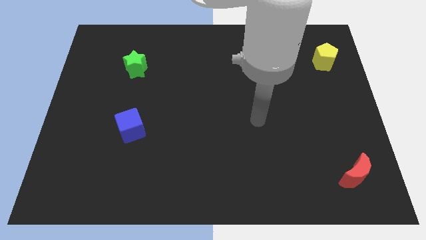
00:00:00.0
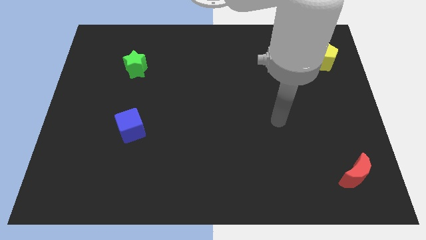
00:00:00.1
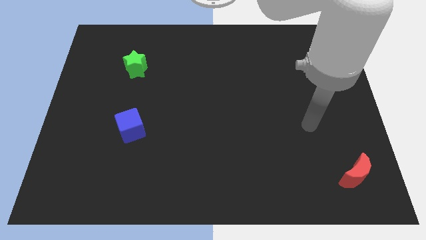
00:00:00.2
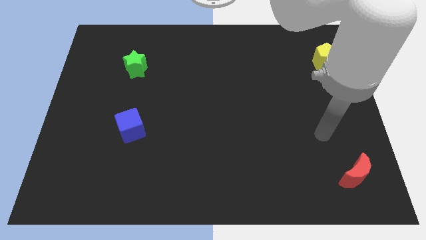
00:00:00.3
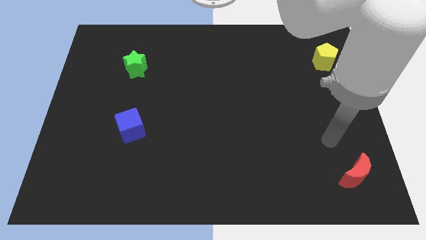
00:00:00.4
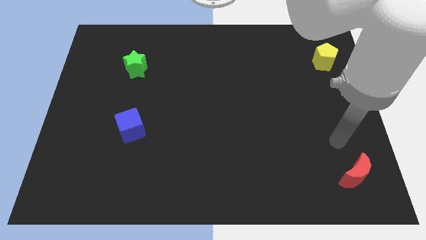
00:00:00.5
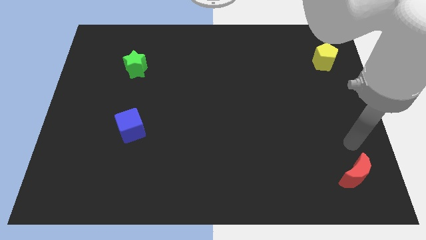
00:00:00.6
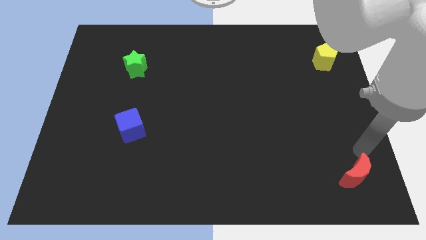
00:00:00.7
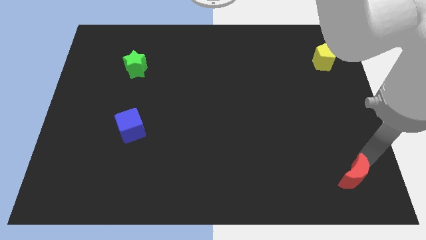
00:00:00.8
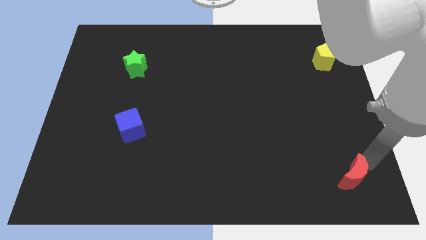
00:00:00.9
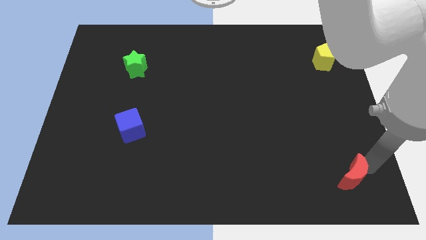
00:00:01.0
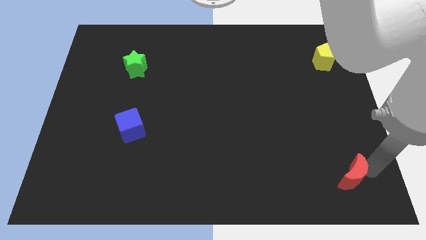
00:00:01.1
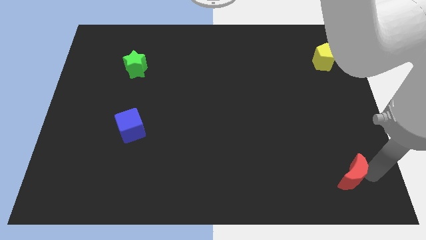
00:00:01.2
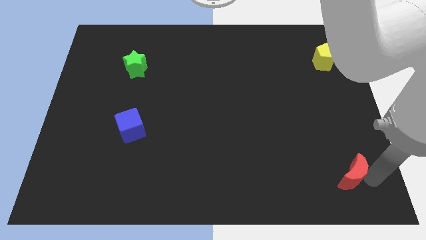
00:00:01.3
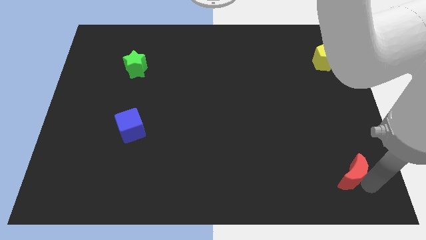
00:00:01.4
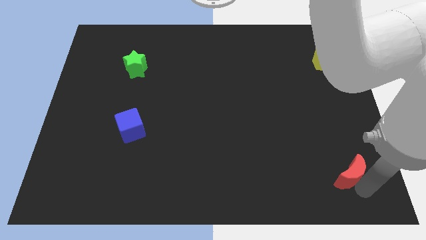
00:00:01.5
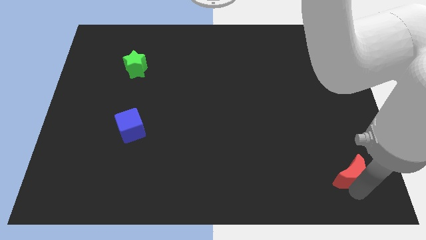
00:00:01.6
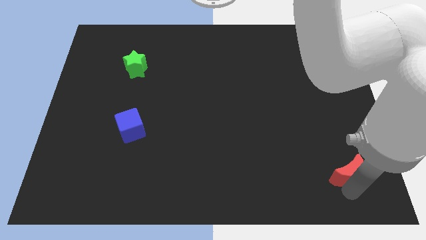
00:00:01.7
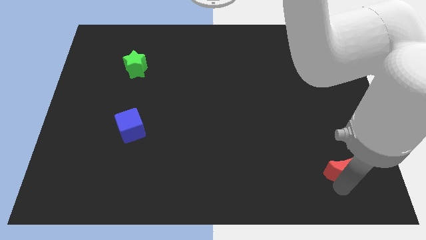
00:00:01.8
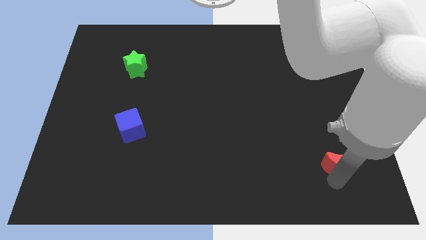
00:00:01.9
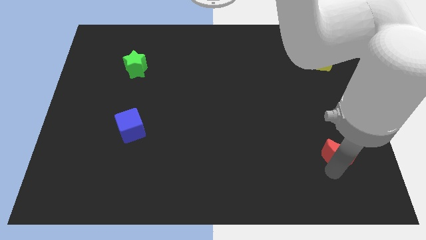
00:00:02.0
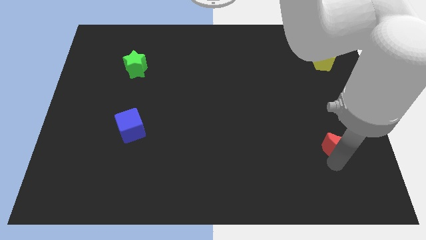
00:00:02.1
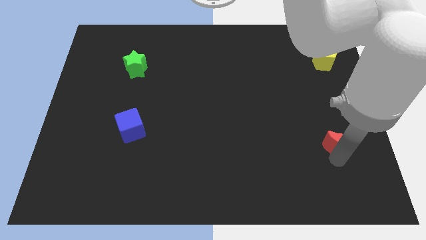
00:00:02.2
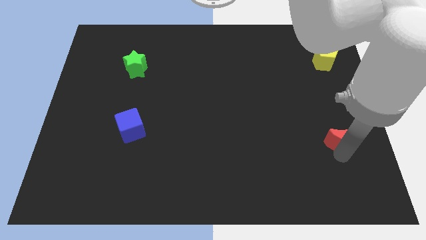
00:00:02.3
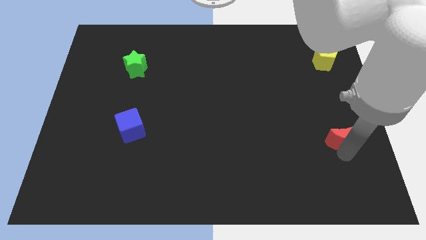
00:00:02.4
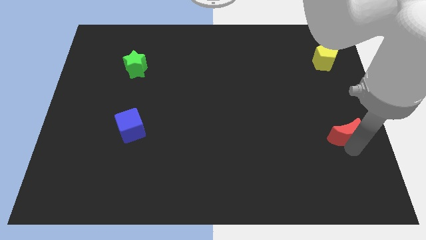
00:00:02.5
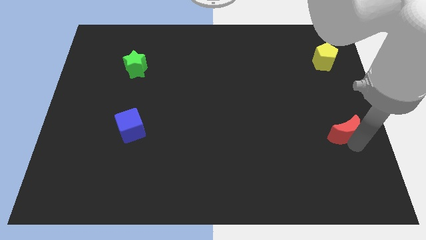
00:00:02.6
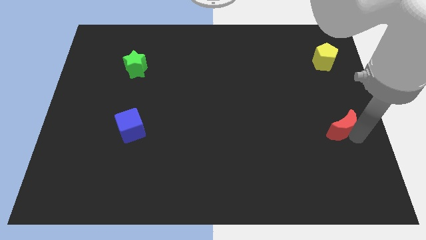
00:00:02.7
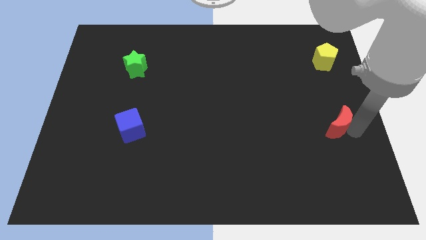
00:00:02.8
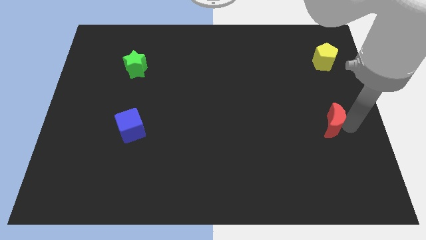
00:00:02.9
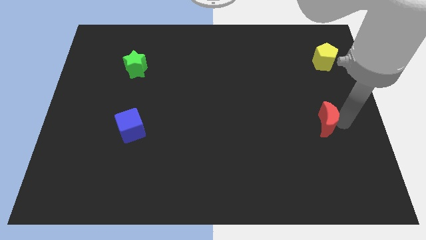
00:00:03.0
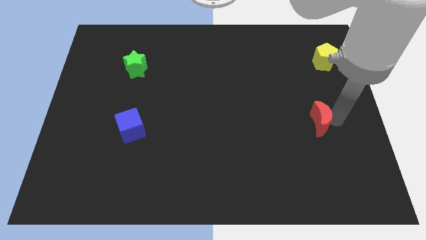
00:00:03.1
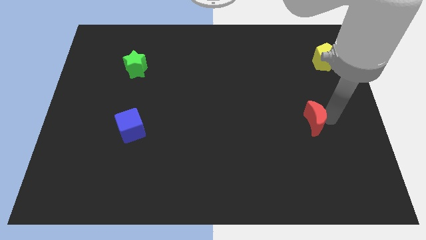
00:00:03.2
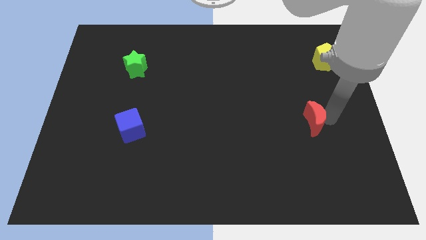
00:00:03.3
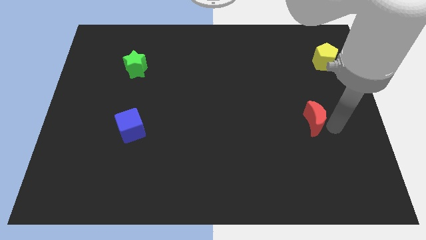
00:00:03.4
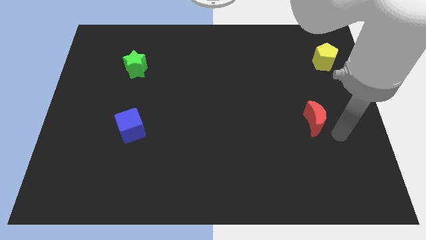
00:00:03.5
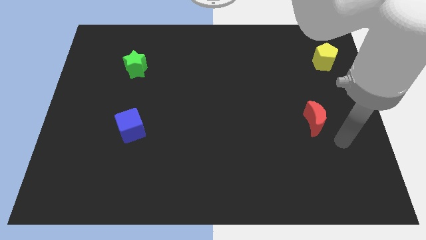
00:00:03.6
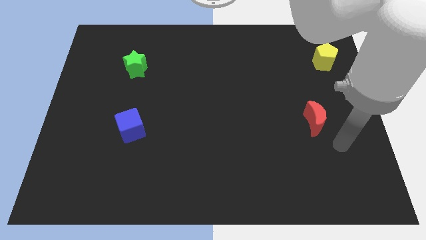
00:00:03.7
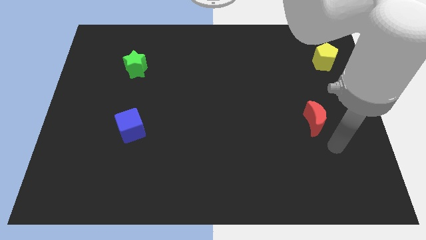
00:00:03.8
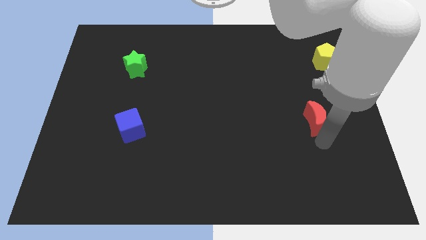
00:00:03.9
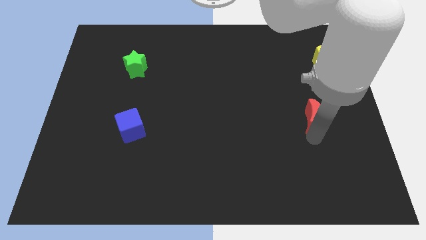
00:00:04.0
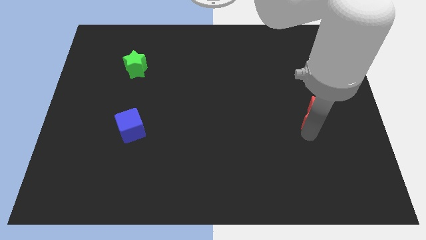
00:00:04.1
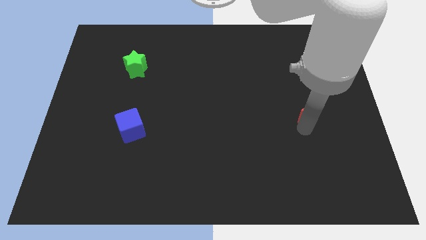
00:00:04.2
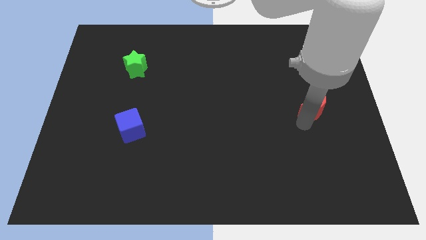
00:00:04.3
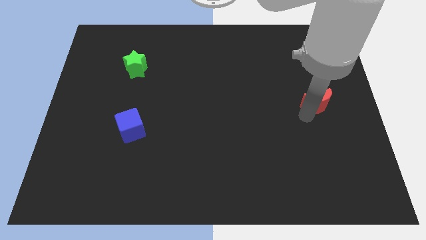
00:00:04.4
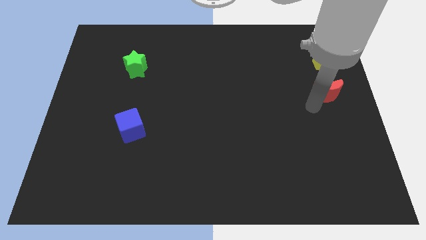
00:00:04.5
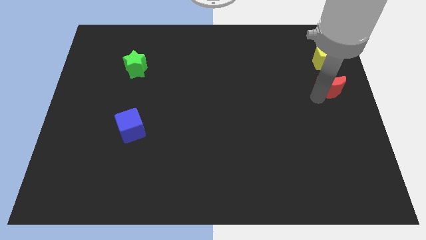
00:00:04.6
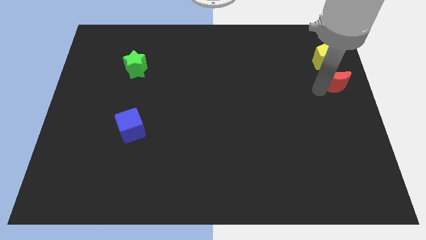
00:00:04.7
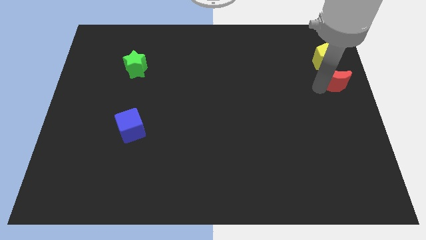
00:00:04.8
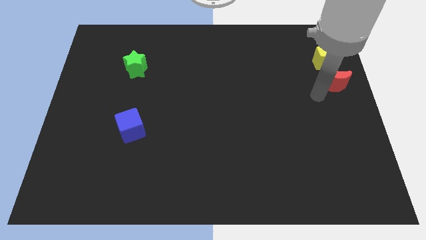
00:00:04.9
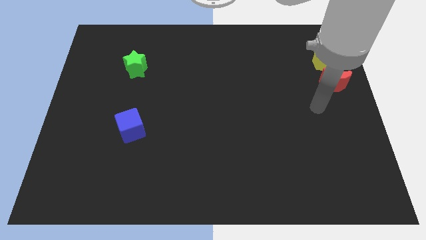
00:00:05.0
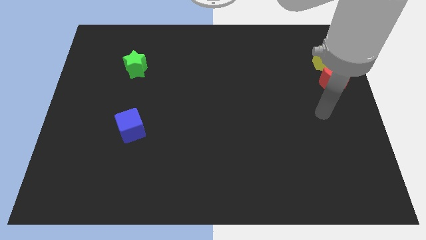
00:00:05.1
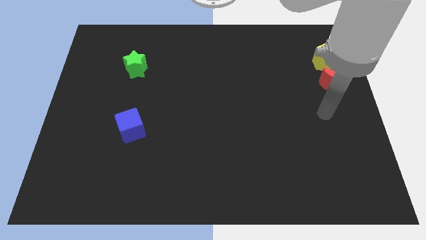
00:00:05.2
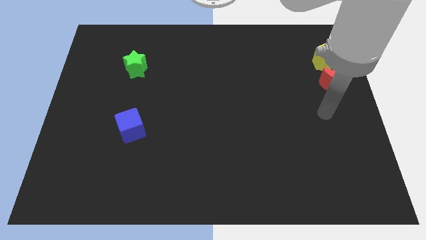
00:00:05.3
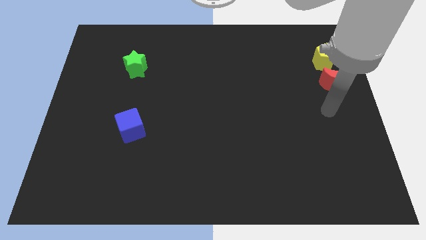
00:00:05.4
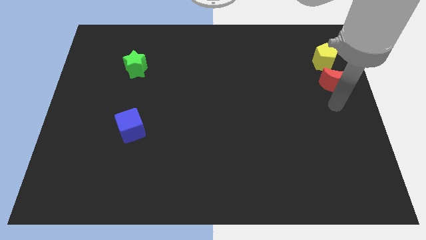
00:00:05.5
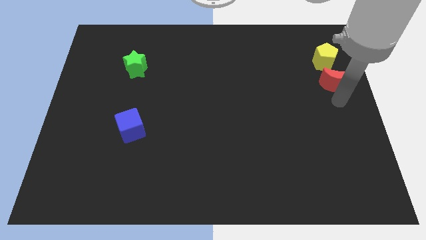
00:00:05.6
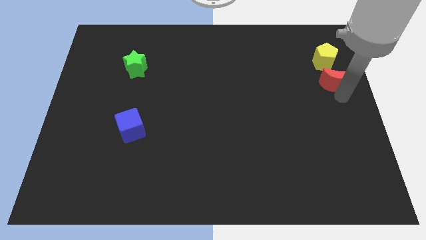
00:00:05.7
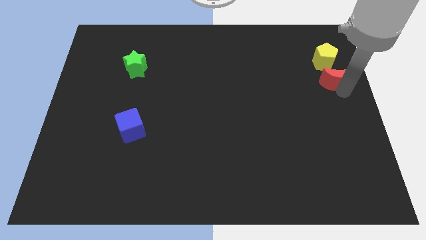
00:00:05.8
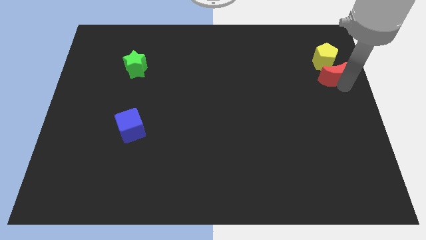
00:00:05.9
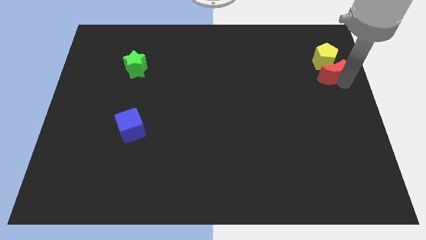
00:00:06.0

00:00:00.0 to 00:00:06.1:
slide the red block next to the yellow pentagon

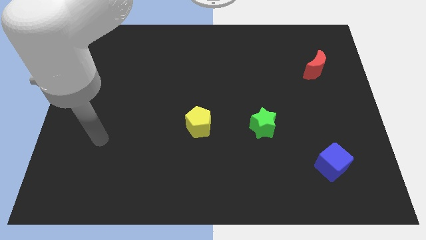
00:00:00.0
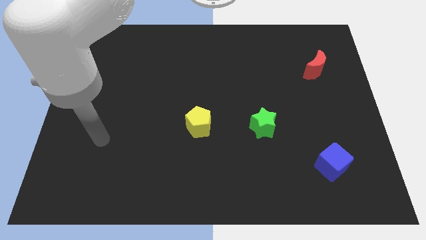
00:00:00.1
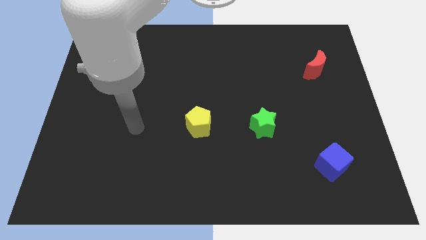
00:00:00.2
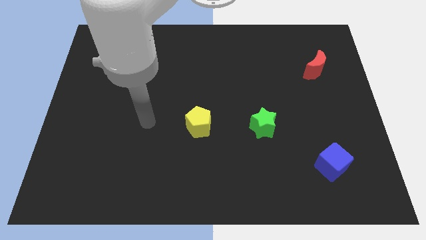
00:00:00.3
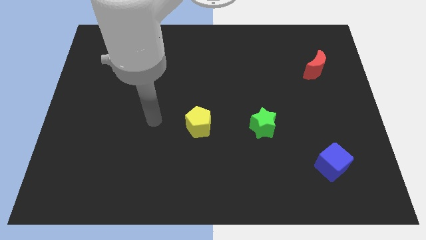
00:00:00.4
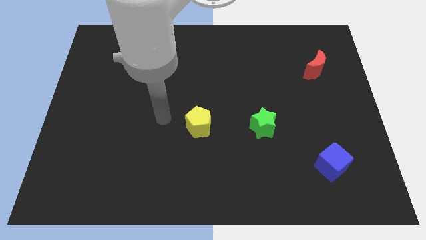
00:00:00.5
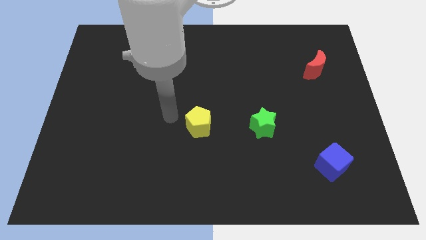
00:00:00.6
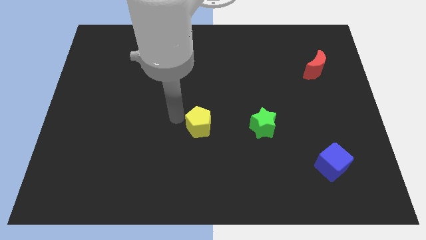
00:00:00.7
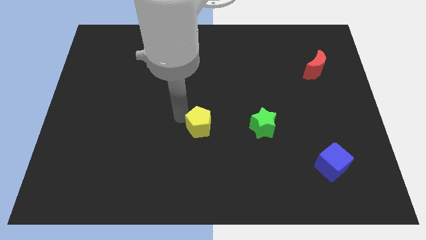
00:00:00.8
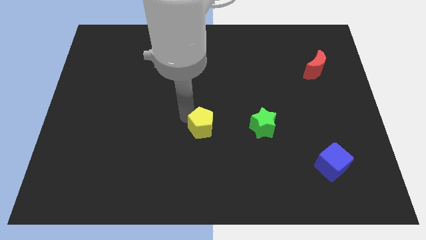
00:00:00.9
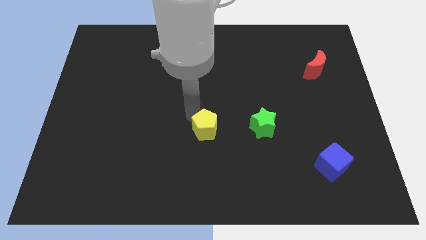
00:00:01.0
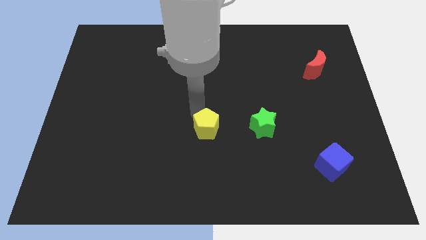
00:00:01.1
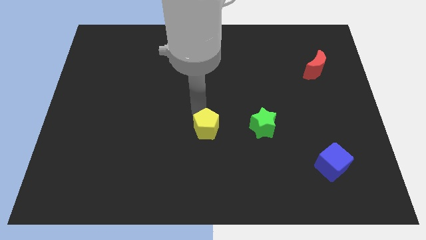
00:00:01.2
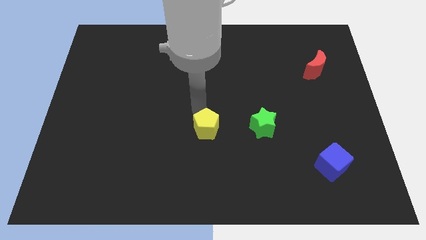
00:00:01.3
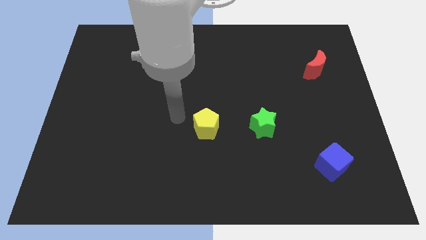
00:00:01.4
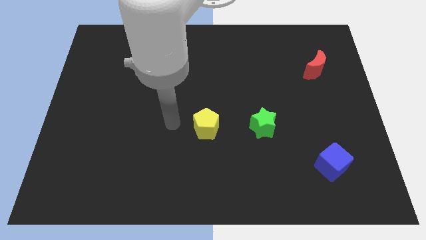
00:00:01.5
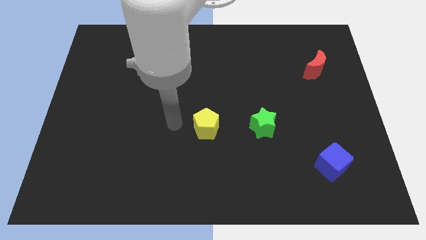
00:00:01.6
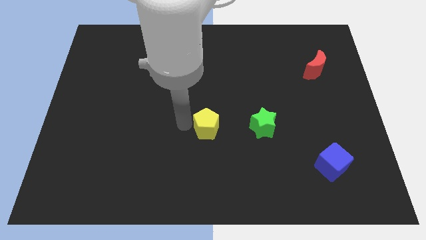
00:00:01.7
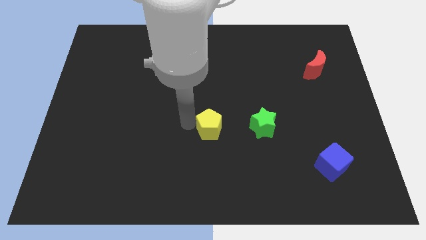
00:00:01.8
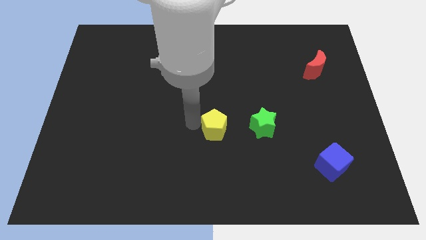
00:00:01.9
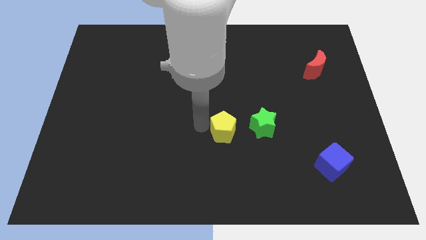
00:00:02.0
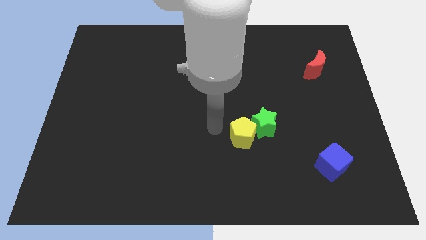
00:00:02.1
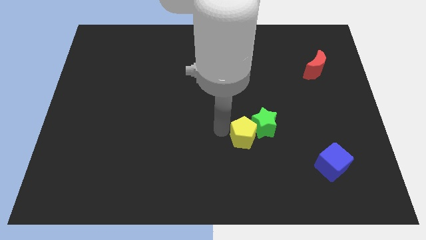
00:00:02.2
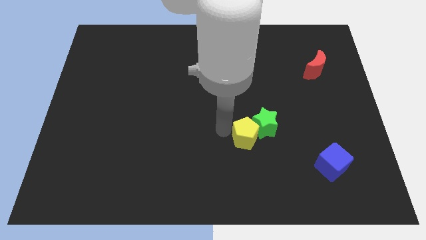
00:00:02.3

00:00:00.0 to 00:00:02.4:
move the yellow pentagon next to the green star
